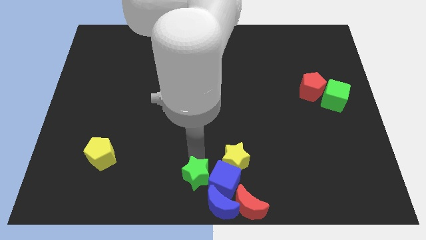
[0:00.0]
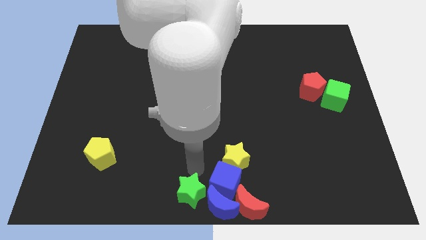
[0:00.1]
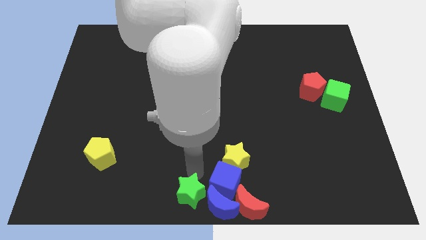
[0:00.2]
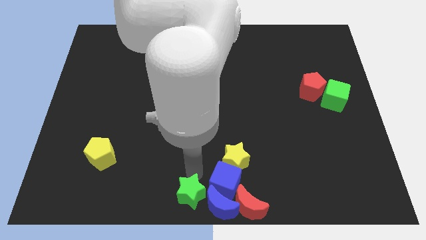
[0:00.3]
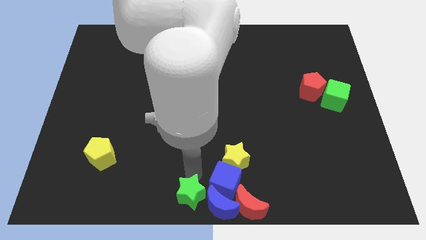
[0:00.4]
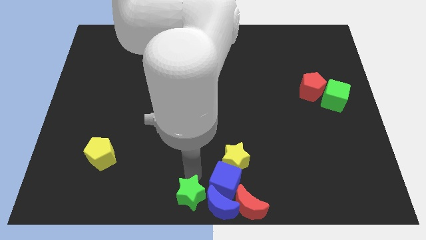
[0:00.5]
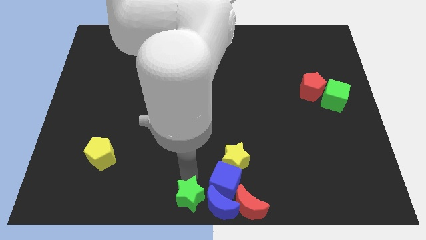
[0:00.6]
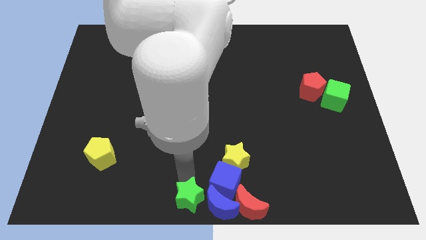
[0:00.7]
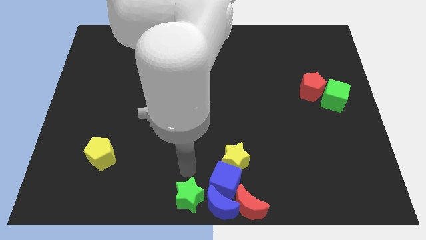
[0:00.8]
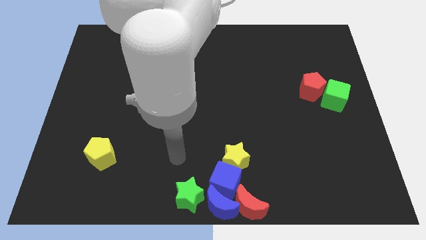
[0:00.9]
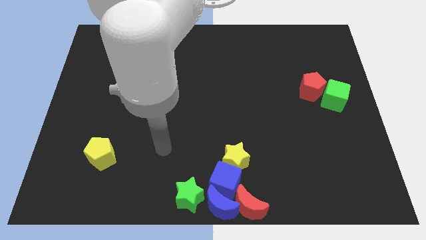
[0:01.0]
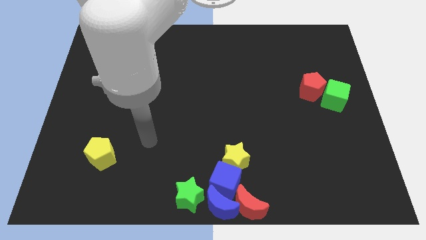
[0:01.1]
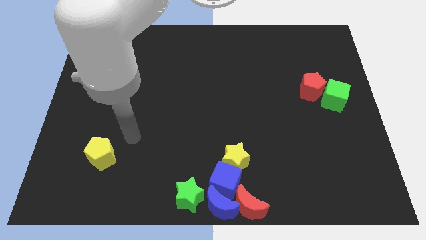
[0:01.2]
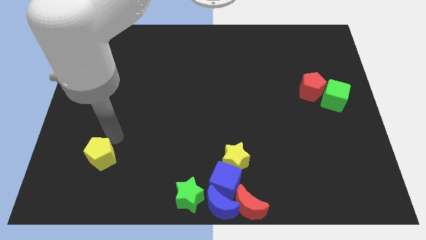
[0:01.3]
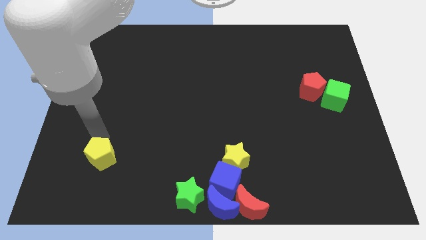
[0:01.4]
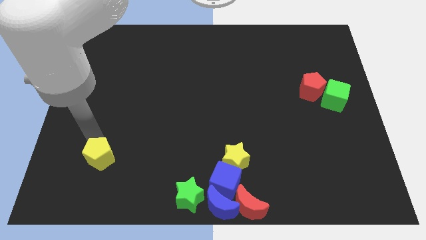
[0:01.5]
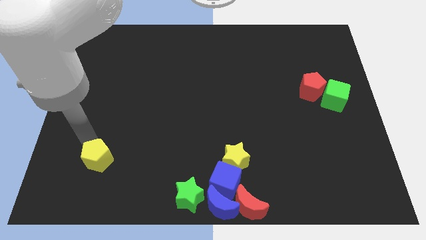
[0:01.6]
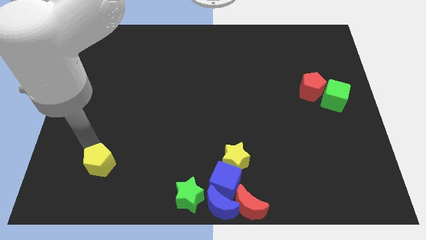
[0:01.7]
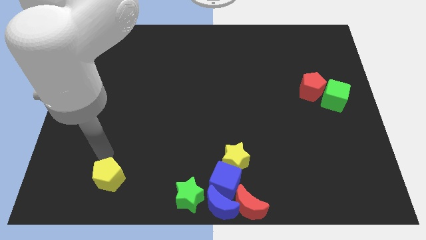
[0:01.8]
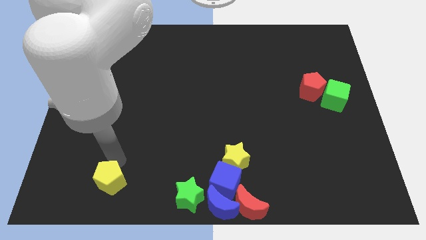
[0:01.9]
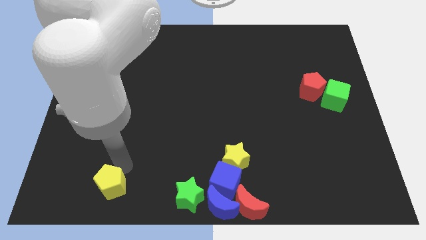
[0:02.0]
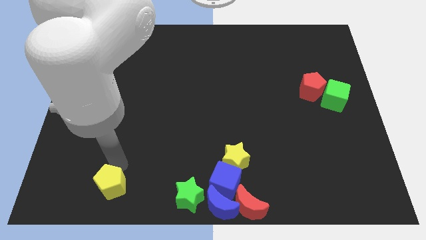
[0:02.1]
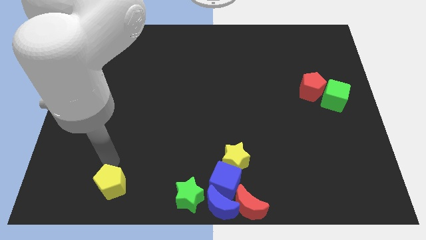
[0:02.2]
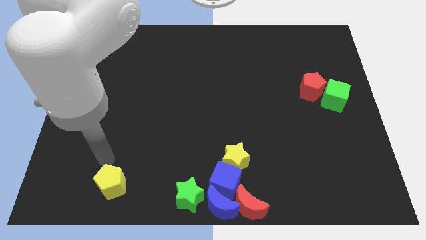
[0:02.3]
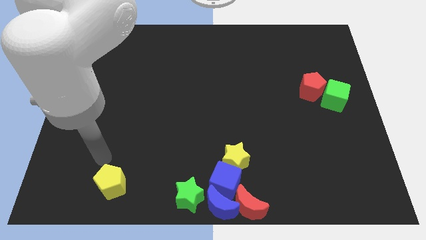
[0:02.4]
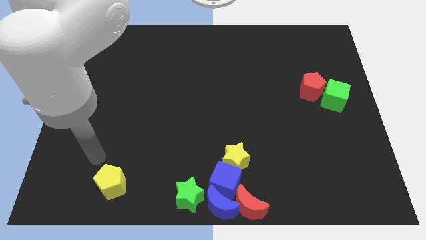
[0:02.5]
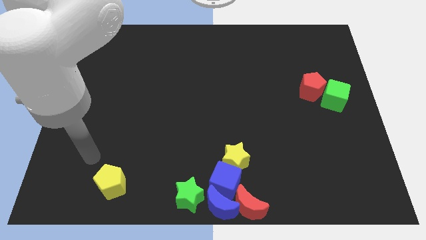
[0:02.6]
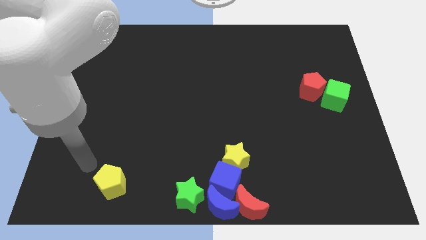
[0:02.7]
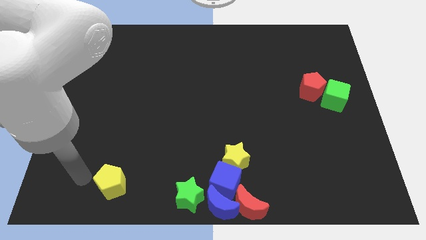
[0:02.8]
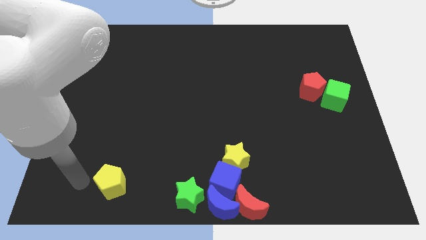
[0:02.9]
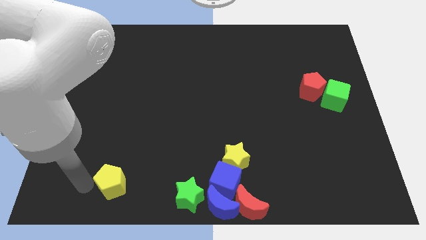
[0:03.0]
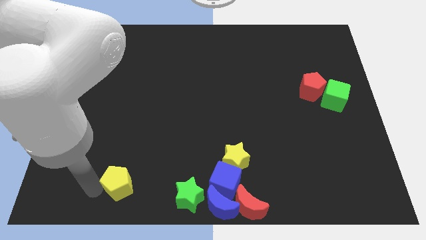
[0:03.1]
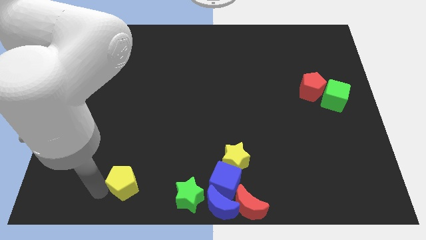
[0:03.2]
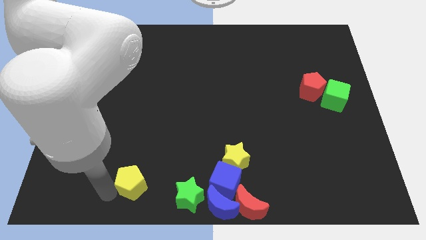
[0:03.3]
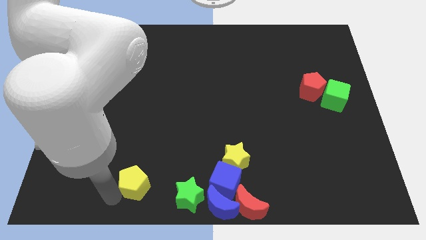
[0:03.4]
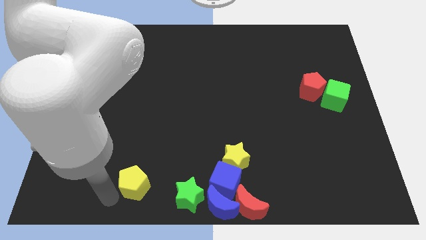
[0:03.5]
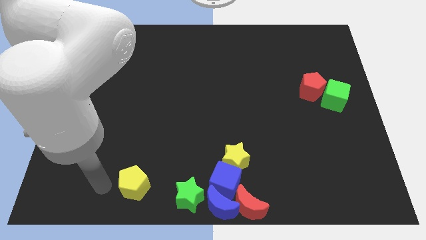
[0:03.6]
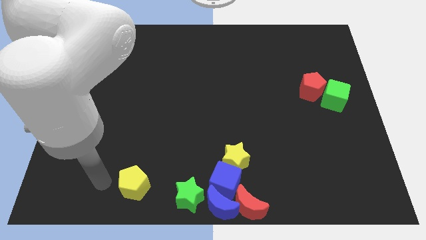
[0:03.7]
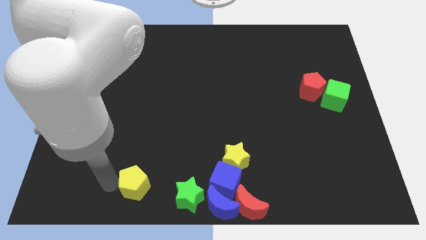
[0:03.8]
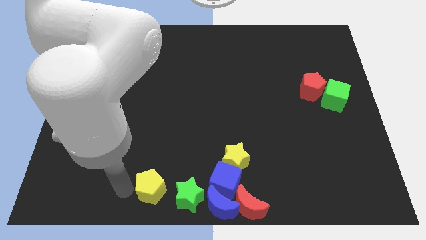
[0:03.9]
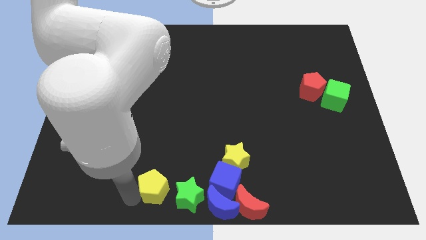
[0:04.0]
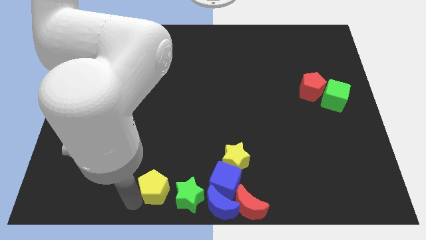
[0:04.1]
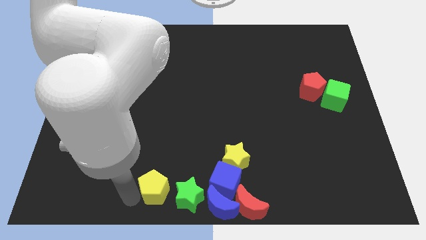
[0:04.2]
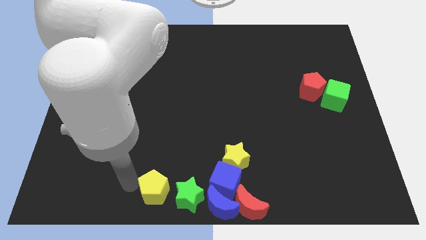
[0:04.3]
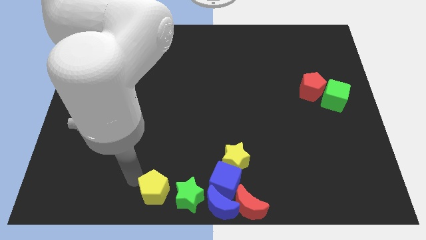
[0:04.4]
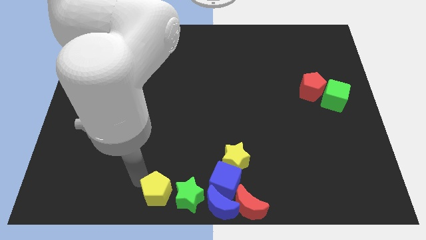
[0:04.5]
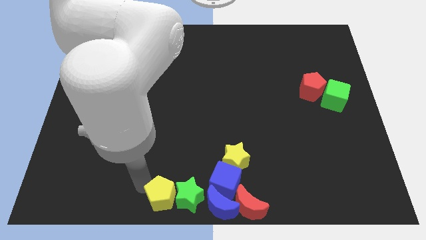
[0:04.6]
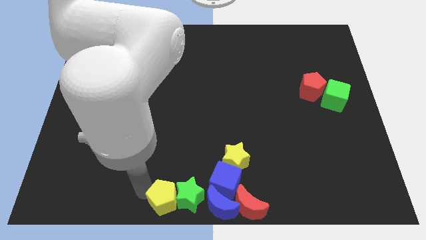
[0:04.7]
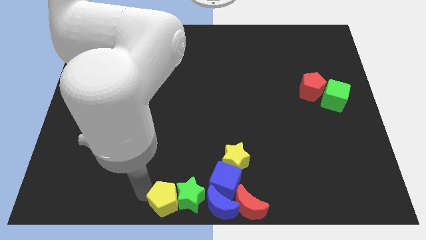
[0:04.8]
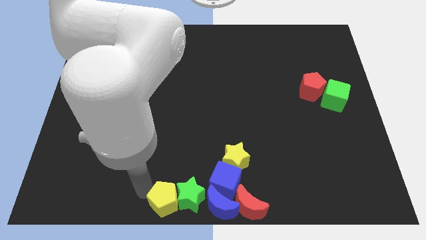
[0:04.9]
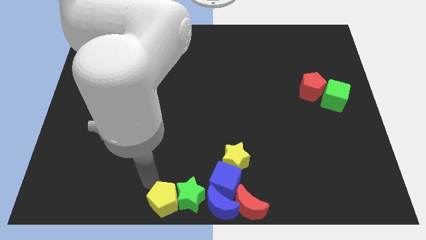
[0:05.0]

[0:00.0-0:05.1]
push the yellow pentagon close to the green star
